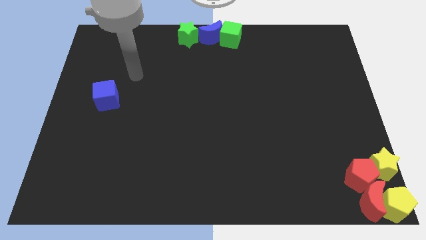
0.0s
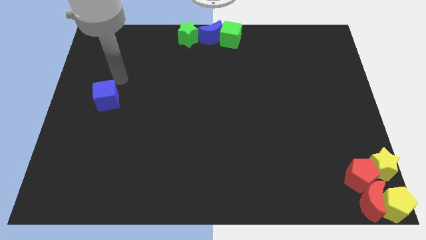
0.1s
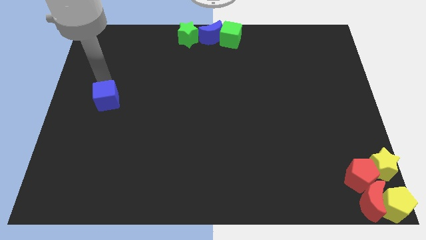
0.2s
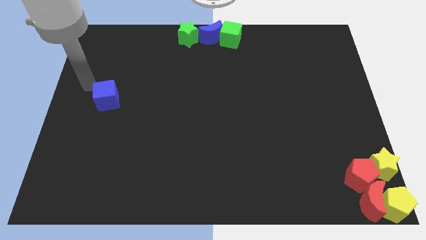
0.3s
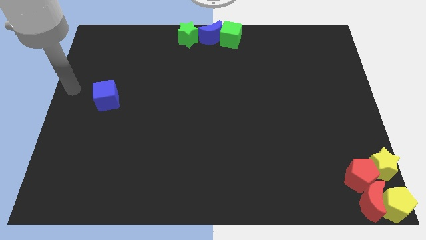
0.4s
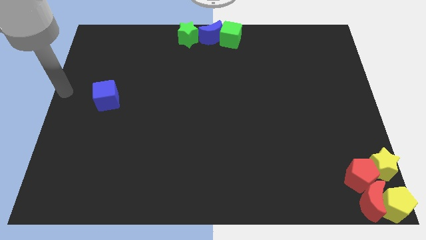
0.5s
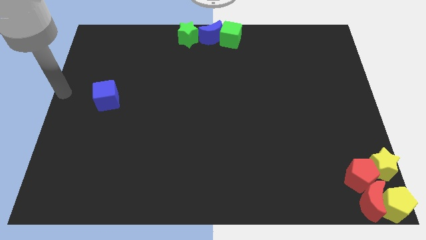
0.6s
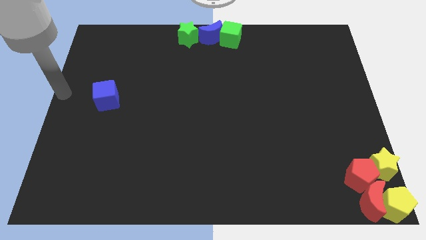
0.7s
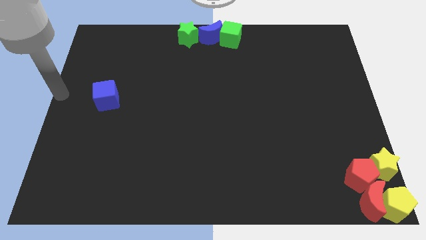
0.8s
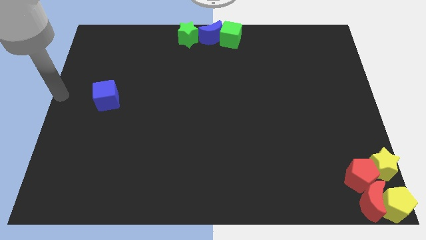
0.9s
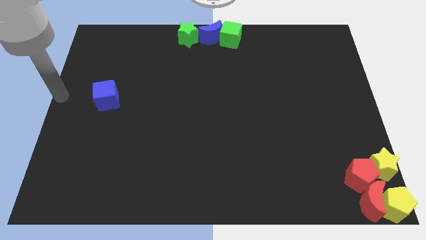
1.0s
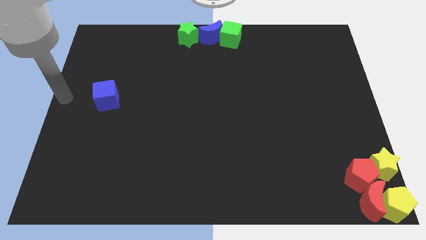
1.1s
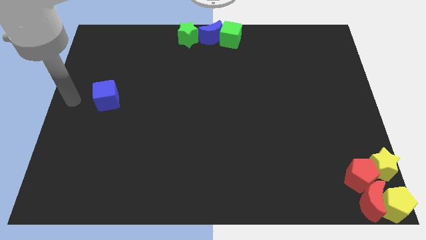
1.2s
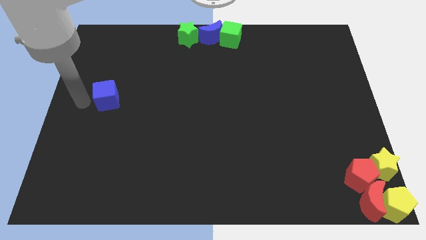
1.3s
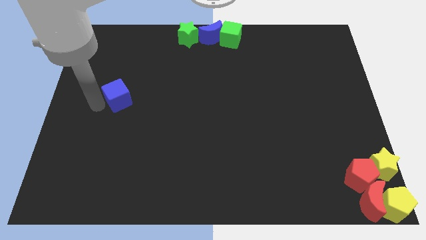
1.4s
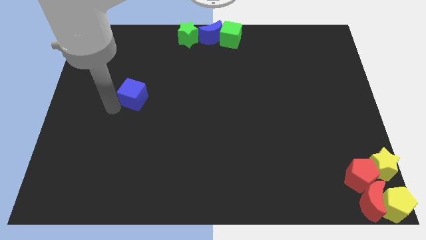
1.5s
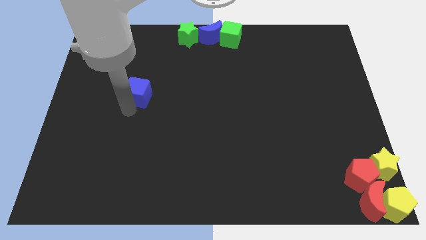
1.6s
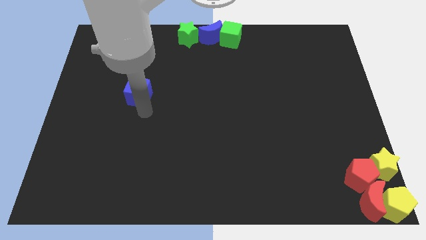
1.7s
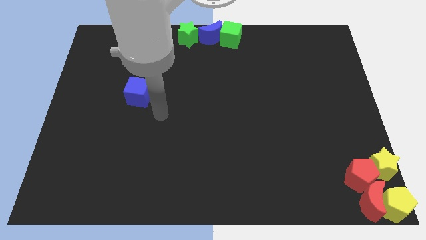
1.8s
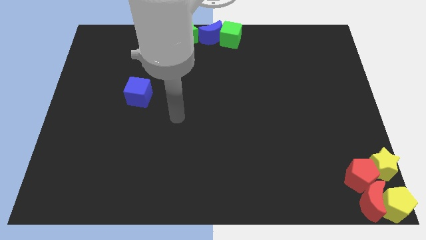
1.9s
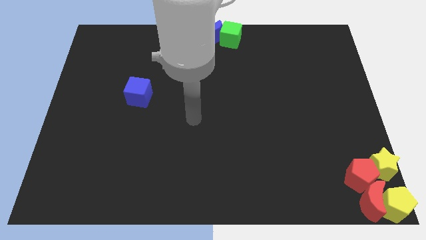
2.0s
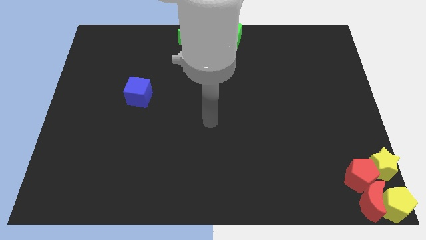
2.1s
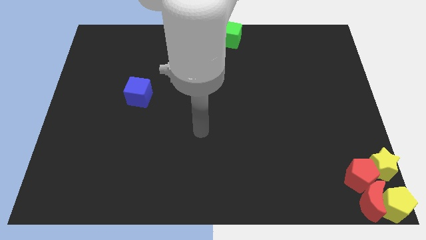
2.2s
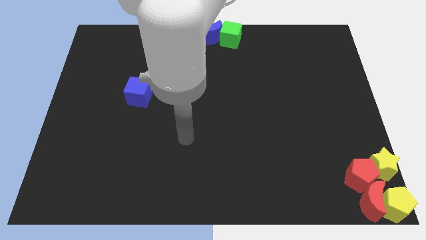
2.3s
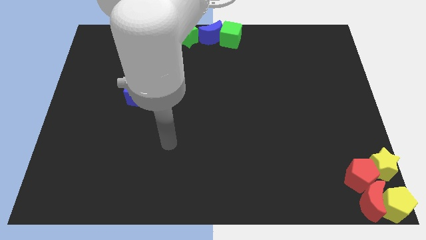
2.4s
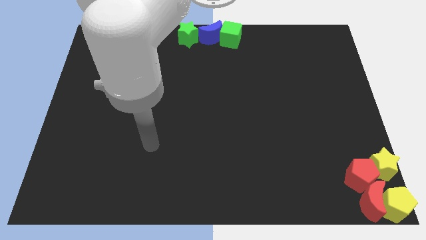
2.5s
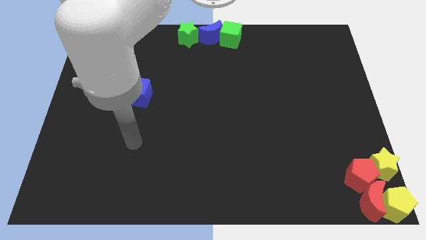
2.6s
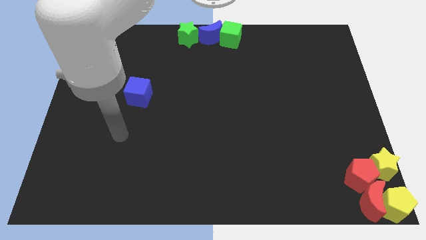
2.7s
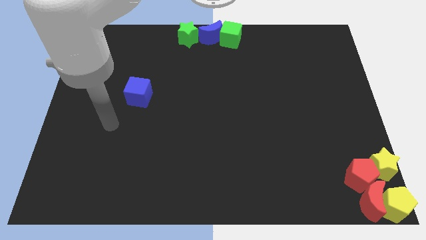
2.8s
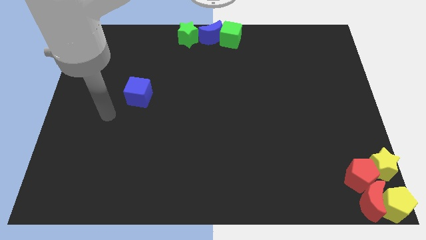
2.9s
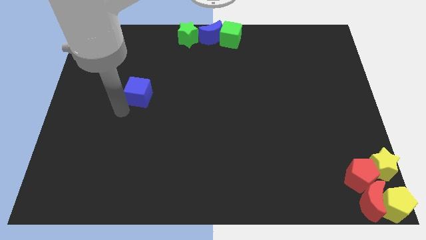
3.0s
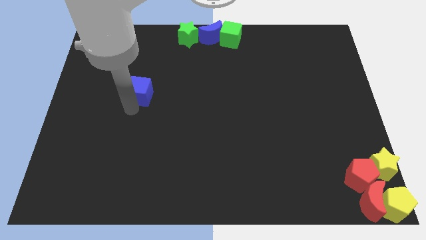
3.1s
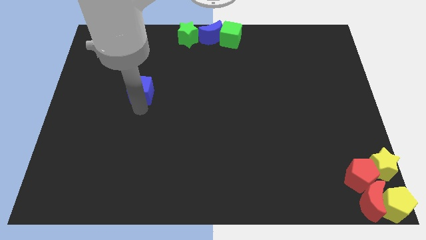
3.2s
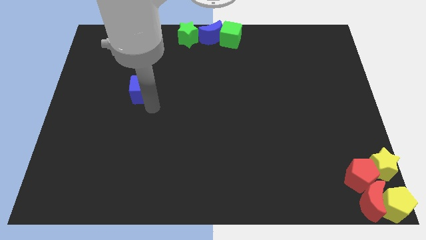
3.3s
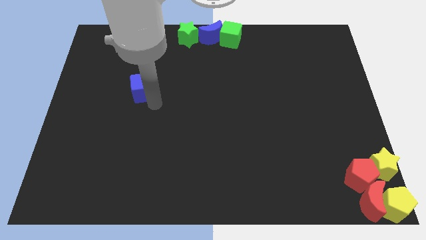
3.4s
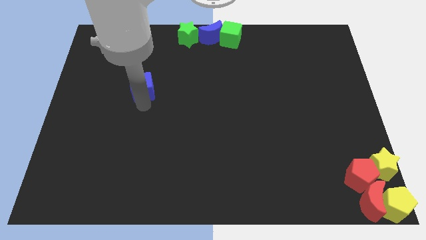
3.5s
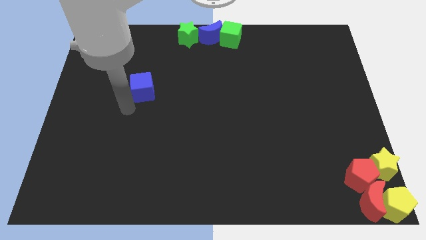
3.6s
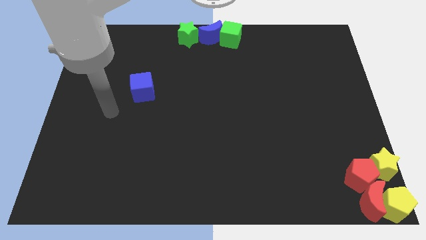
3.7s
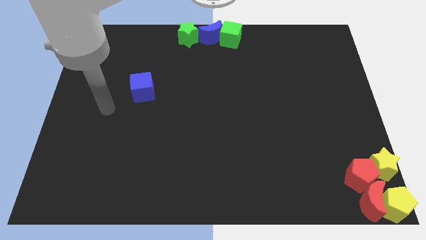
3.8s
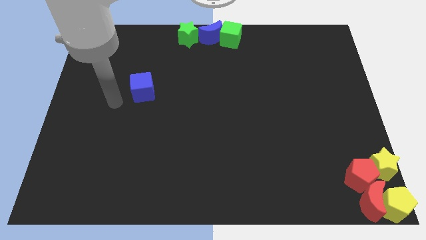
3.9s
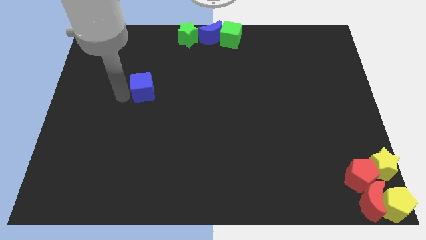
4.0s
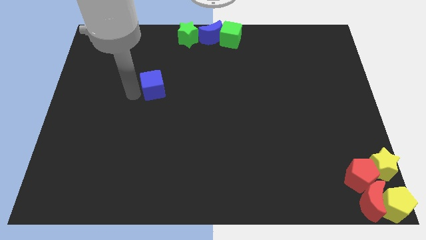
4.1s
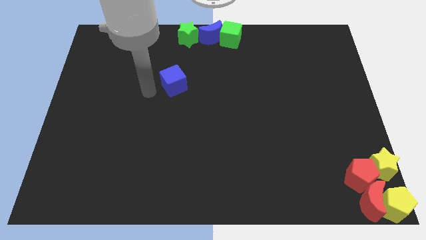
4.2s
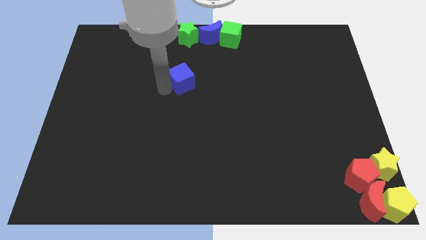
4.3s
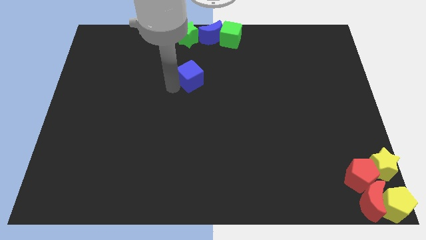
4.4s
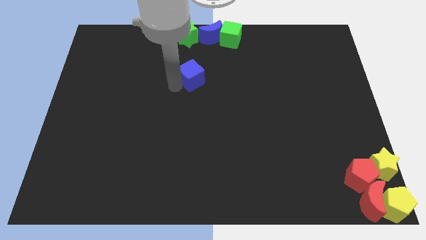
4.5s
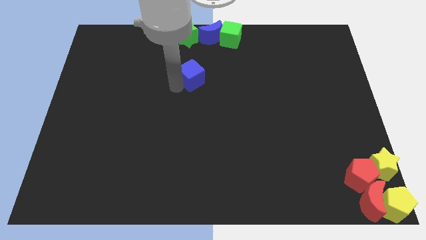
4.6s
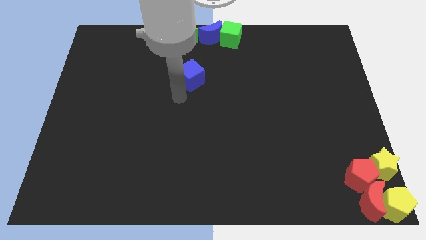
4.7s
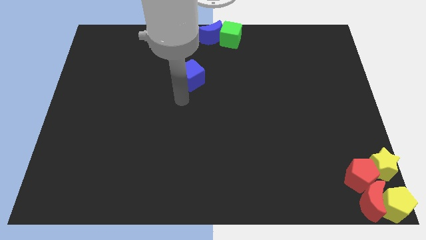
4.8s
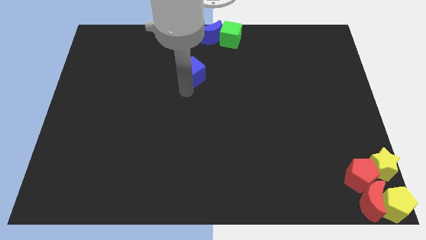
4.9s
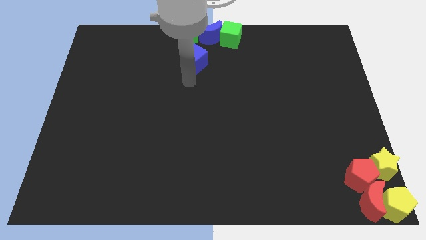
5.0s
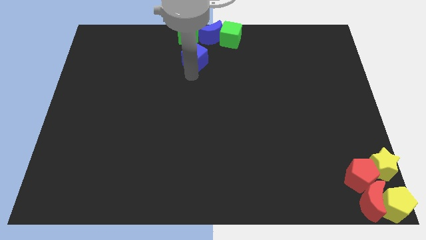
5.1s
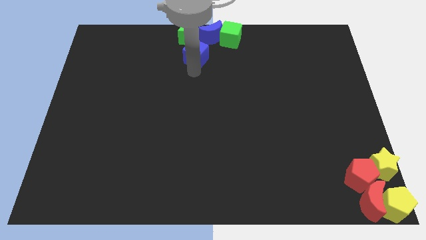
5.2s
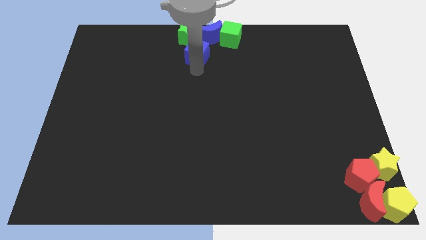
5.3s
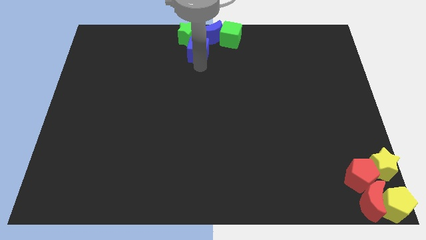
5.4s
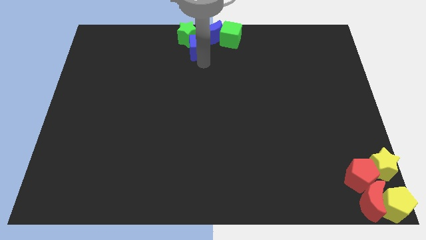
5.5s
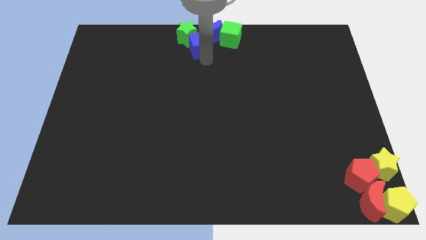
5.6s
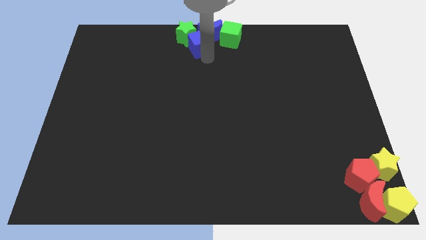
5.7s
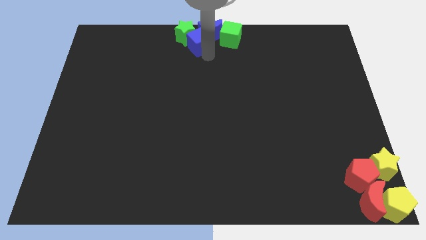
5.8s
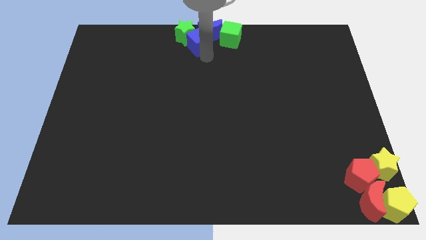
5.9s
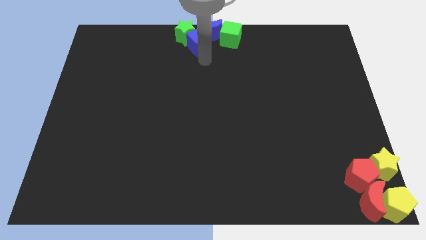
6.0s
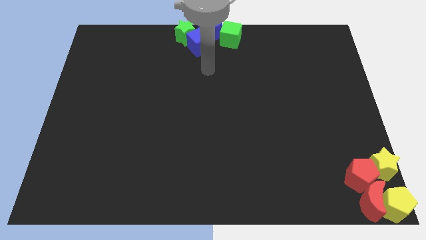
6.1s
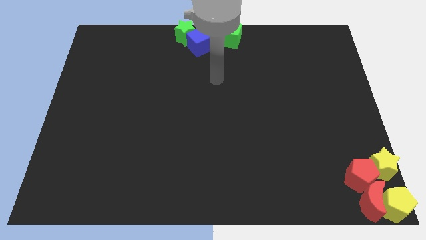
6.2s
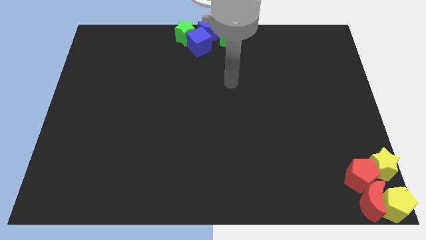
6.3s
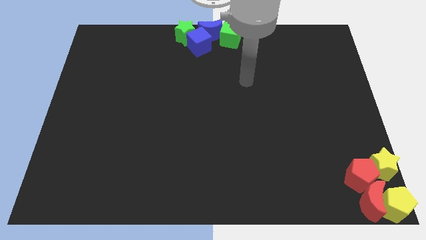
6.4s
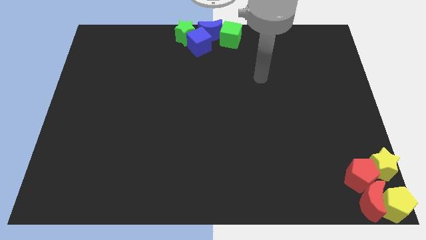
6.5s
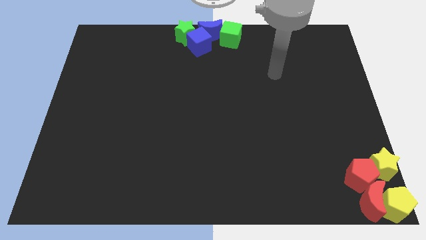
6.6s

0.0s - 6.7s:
push the blue cube into the blue crescent and green star touching from the bottom

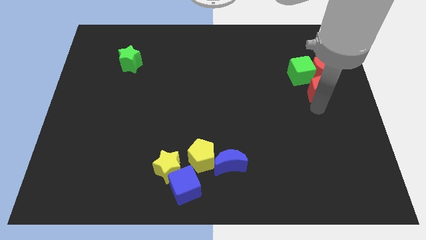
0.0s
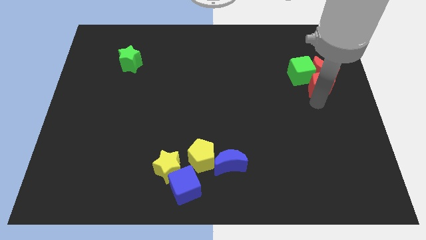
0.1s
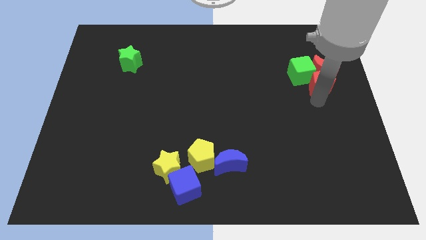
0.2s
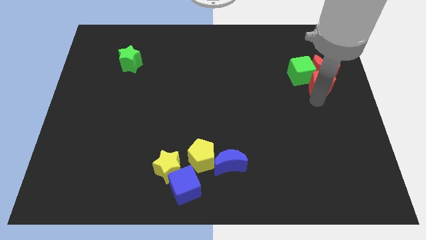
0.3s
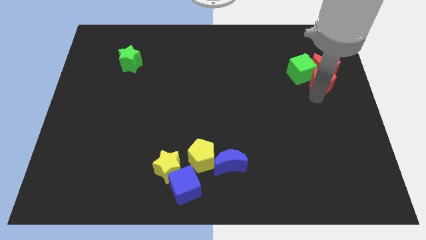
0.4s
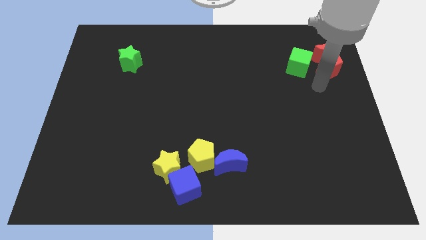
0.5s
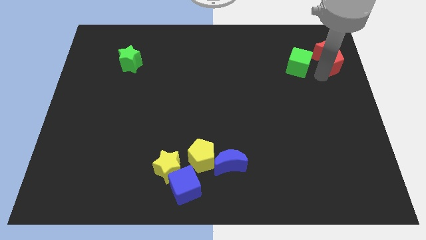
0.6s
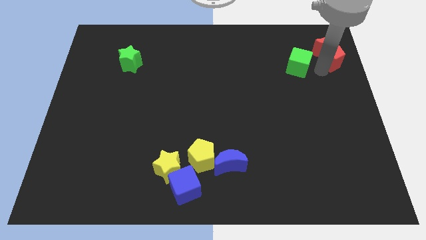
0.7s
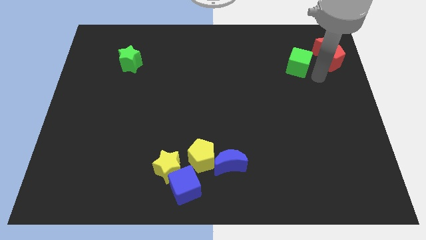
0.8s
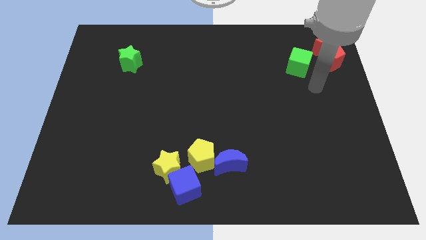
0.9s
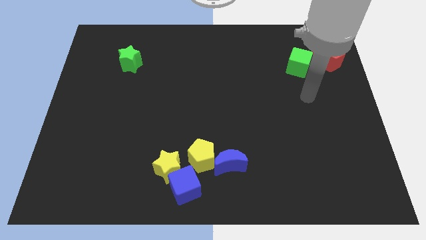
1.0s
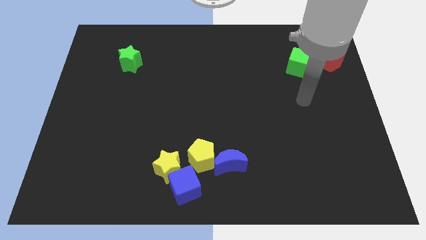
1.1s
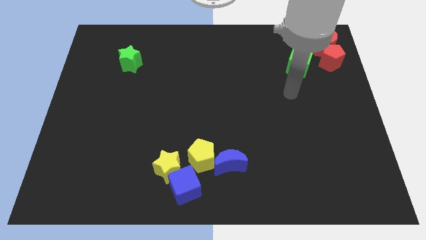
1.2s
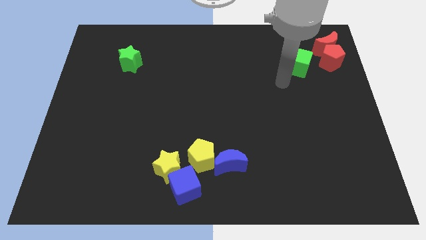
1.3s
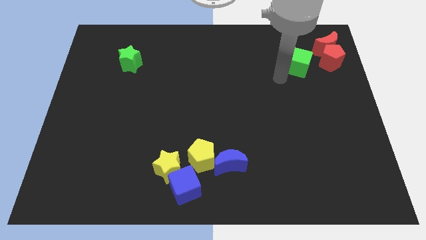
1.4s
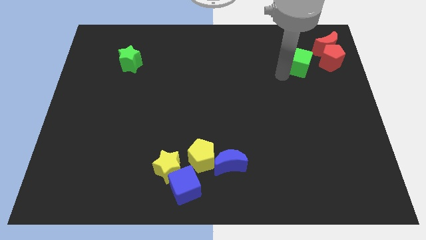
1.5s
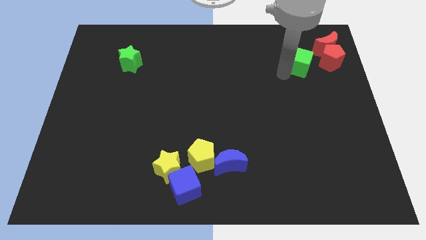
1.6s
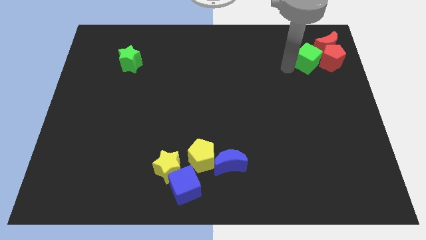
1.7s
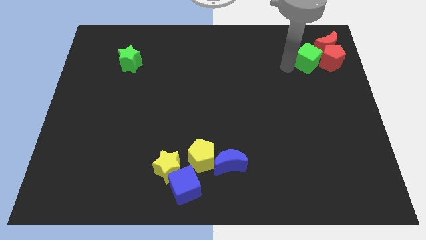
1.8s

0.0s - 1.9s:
push the group of blocks towards the top right

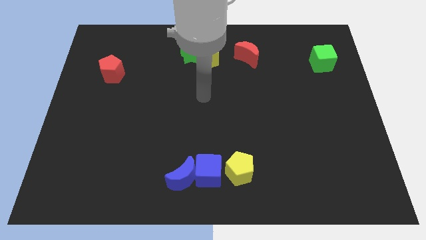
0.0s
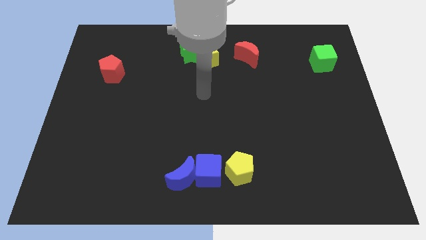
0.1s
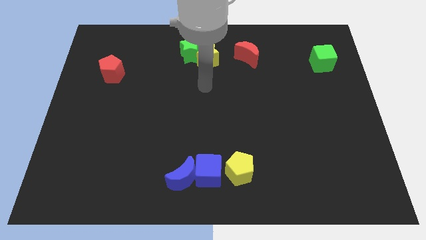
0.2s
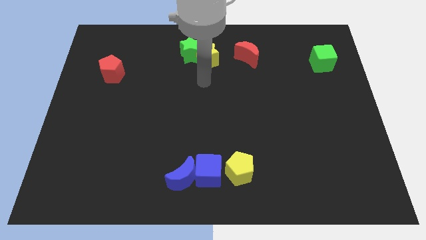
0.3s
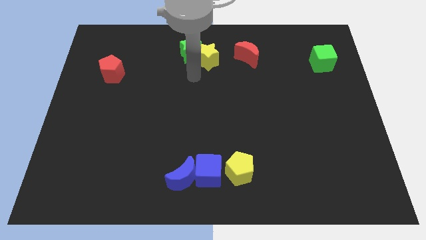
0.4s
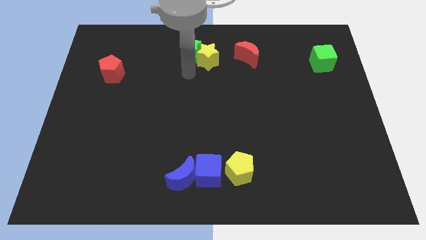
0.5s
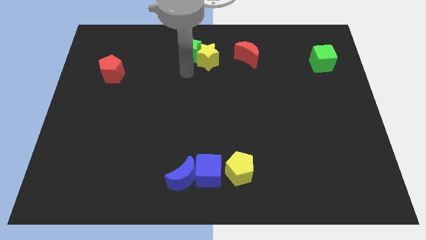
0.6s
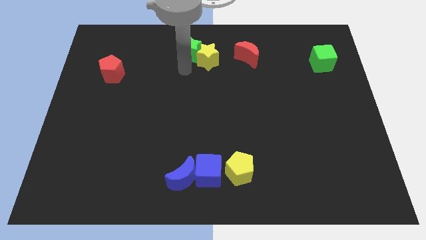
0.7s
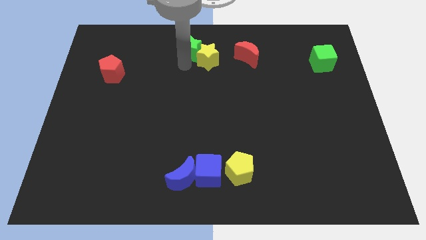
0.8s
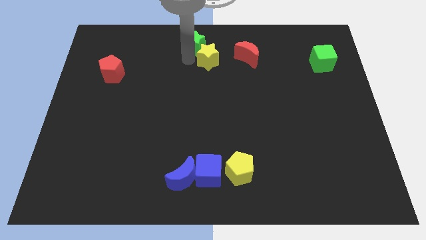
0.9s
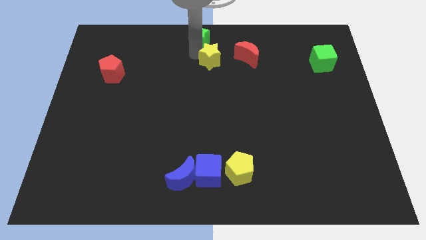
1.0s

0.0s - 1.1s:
place the green star at the top of yellow star
